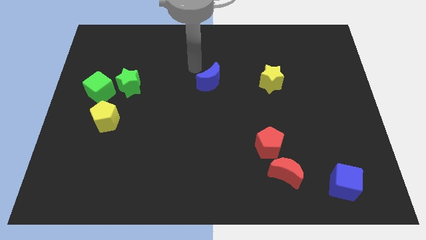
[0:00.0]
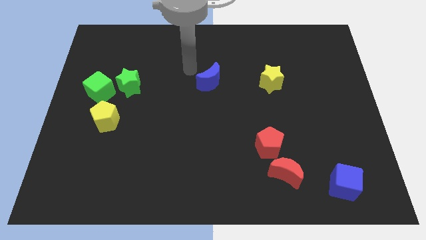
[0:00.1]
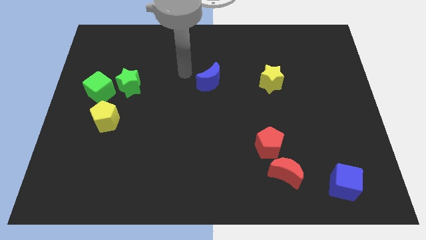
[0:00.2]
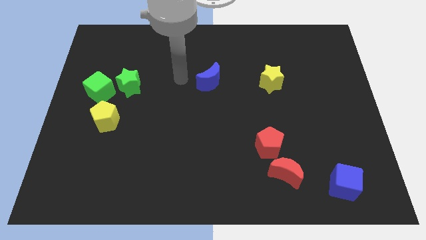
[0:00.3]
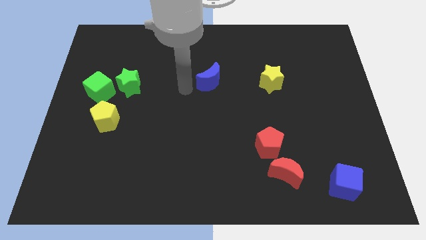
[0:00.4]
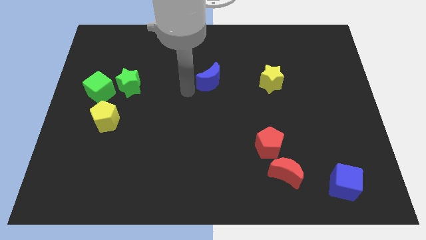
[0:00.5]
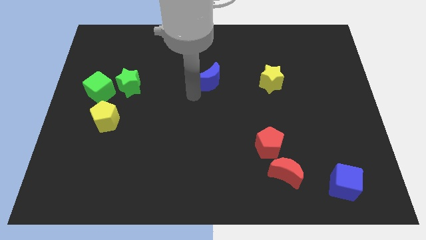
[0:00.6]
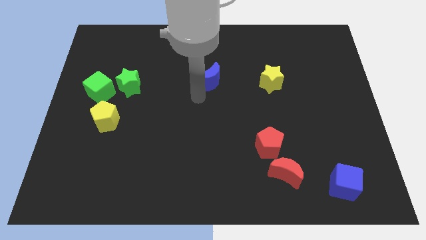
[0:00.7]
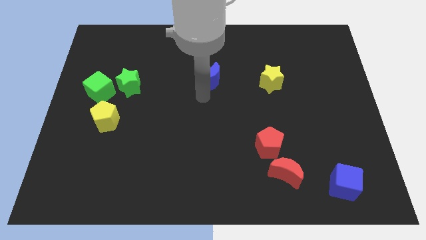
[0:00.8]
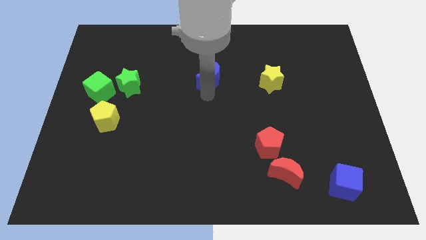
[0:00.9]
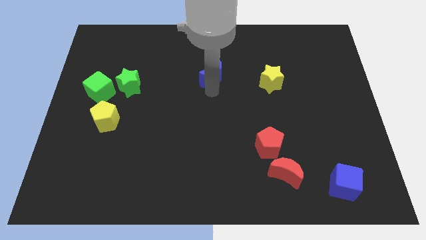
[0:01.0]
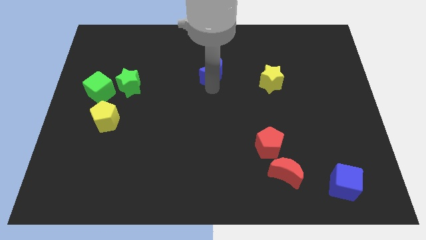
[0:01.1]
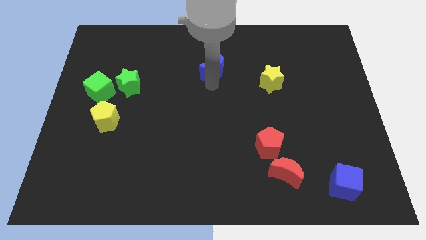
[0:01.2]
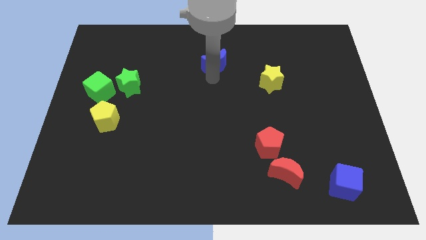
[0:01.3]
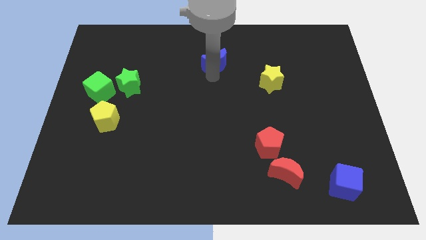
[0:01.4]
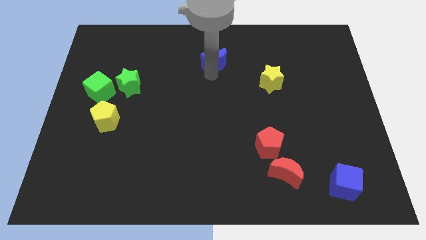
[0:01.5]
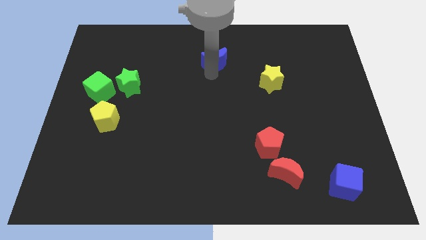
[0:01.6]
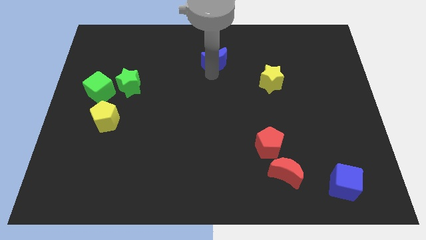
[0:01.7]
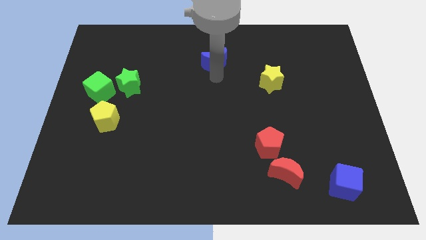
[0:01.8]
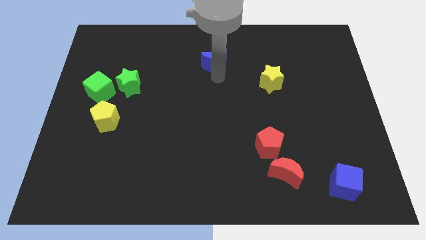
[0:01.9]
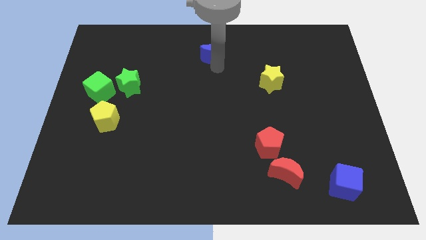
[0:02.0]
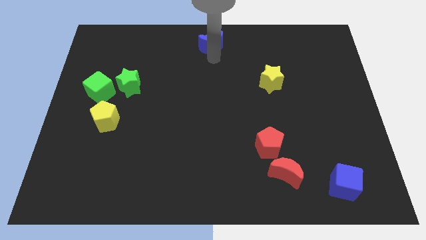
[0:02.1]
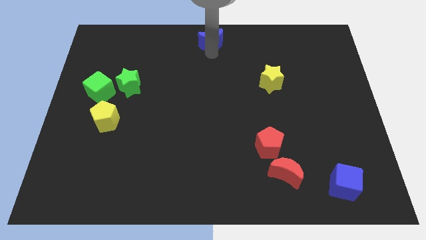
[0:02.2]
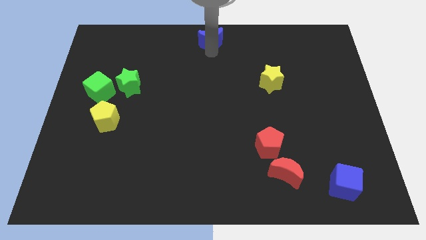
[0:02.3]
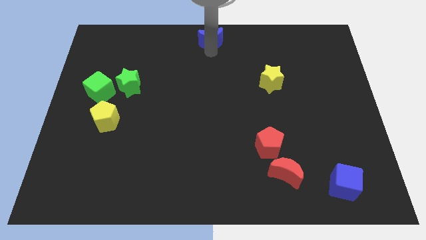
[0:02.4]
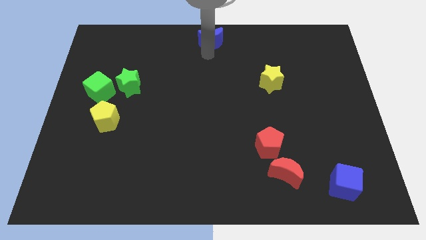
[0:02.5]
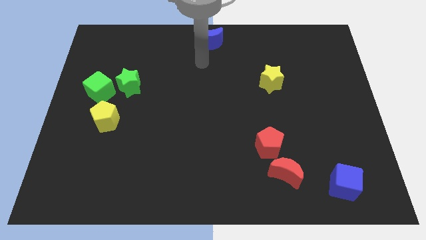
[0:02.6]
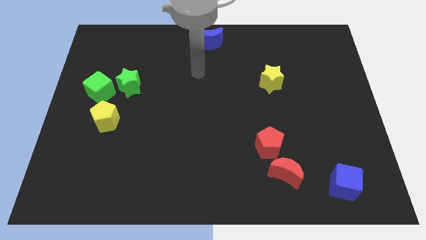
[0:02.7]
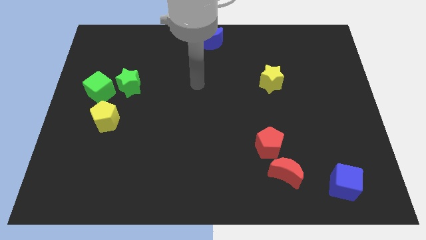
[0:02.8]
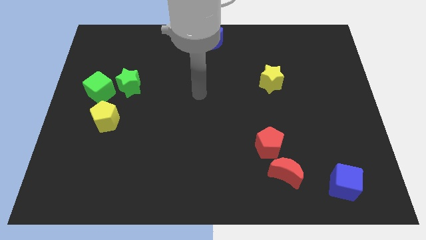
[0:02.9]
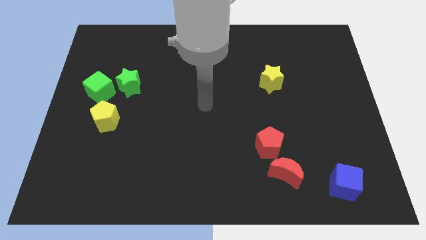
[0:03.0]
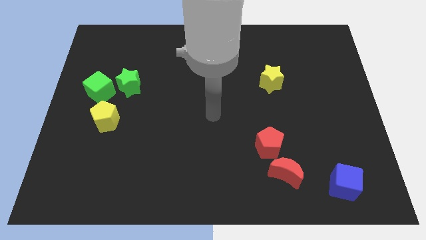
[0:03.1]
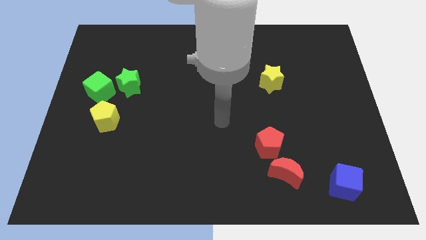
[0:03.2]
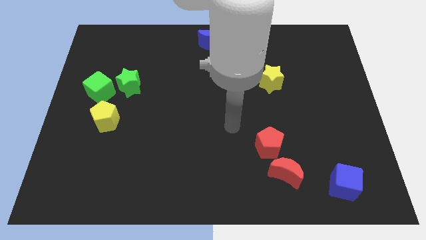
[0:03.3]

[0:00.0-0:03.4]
place the blue moon diagonally top left to the yellow star

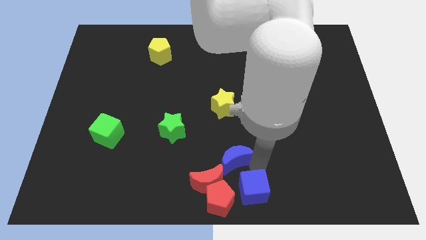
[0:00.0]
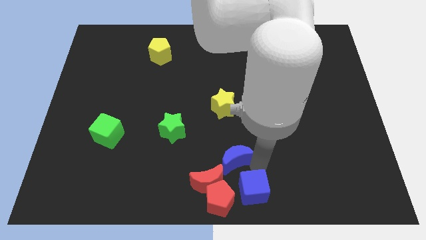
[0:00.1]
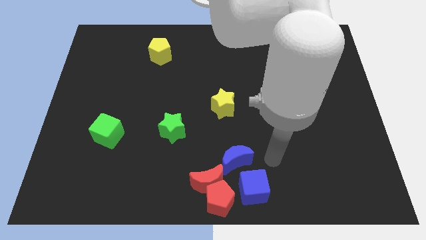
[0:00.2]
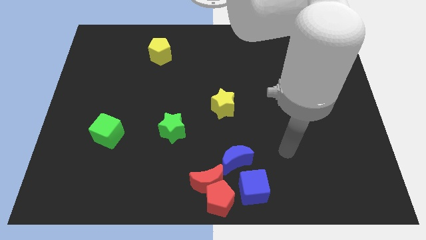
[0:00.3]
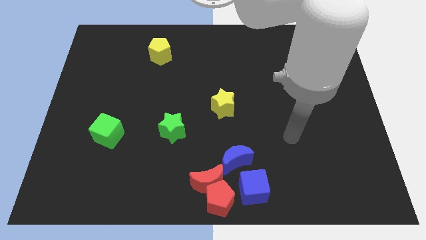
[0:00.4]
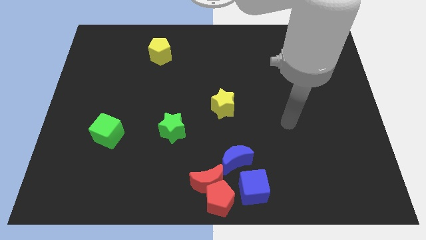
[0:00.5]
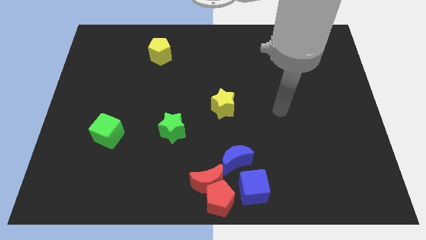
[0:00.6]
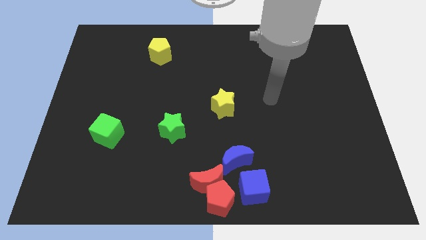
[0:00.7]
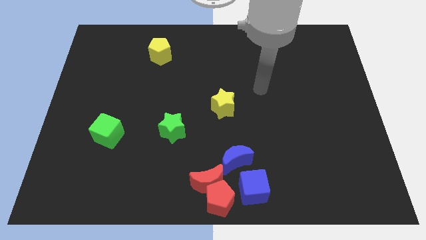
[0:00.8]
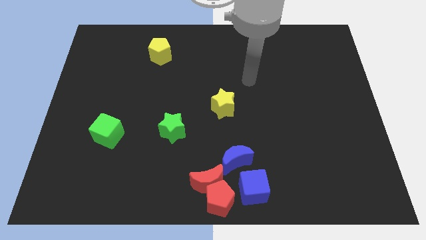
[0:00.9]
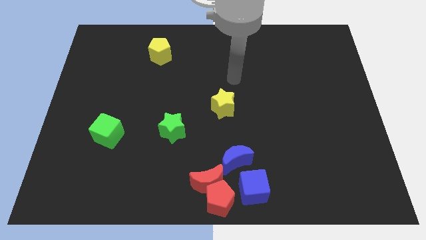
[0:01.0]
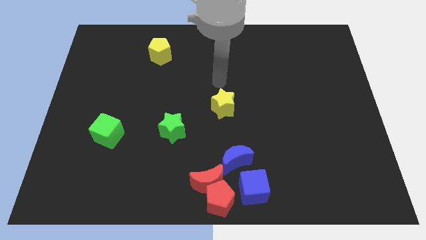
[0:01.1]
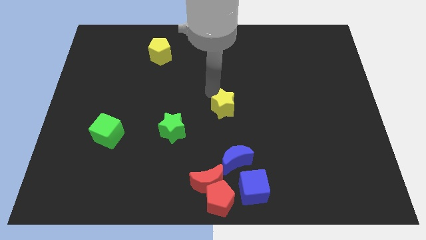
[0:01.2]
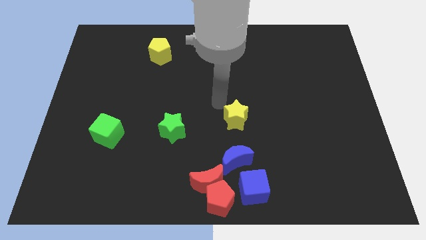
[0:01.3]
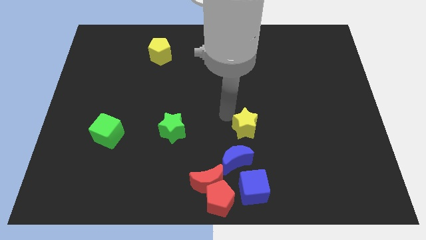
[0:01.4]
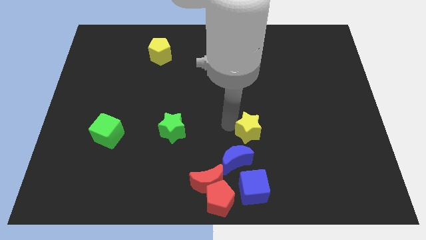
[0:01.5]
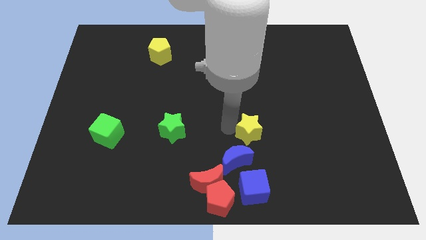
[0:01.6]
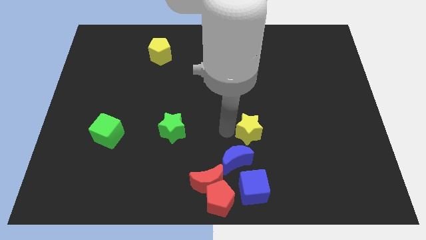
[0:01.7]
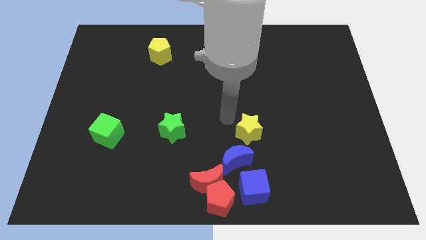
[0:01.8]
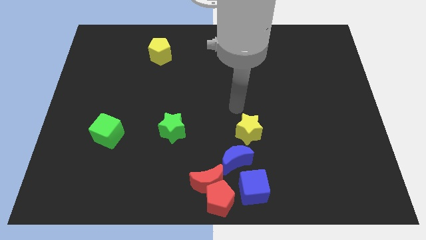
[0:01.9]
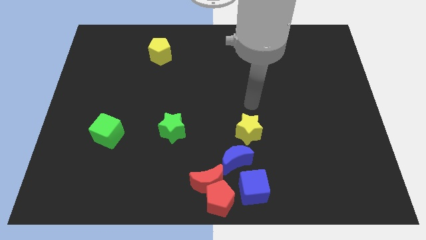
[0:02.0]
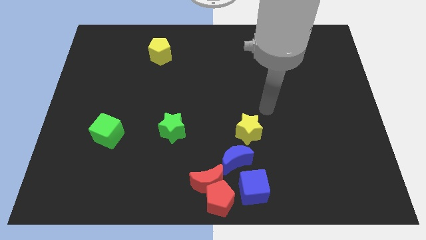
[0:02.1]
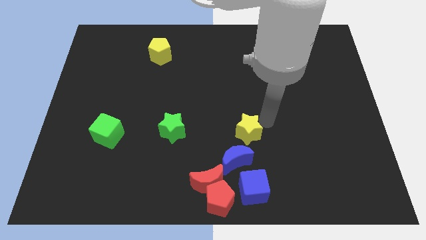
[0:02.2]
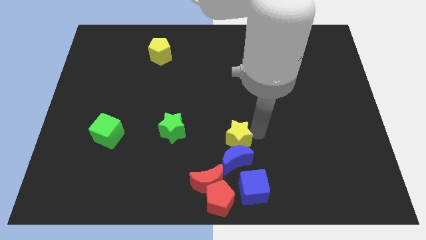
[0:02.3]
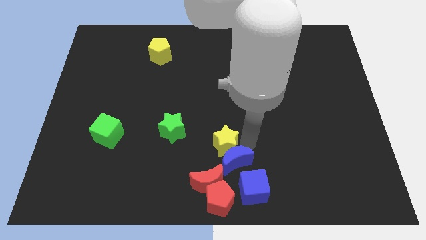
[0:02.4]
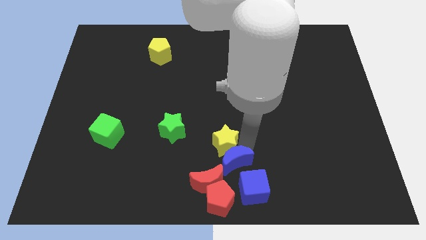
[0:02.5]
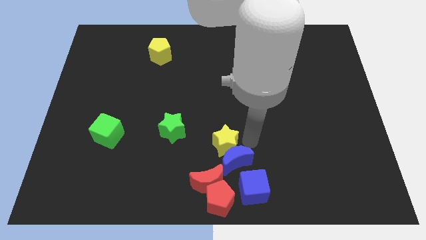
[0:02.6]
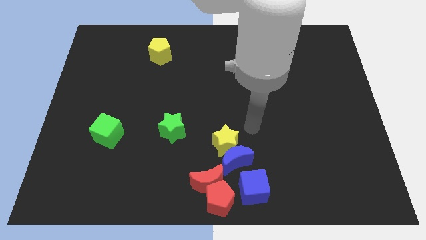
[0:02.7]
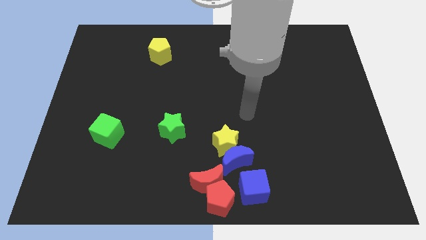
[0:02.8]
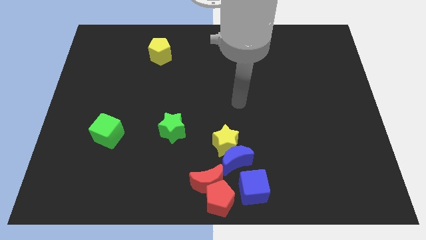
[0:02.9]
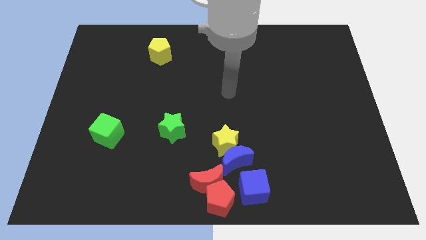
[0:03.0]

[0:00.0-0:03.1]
push yellow star into the blue moon

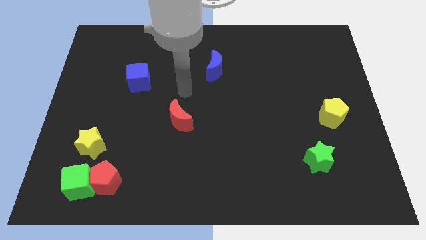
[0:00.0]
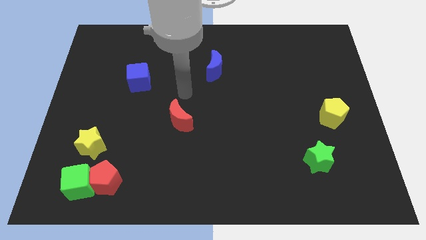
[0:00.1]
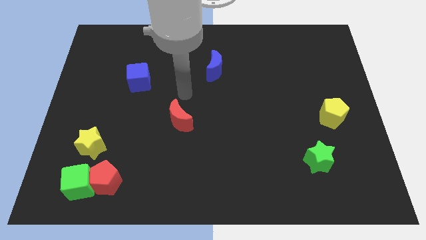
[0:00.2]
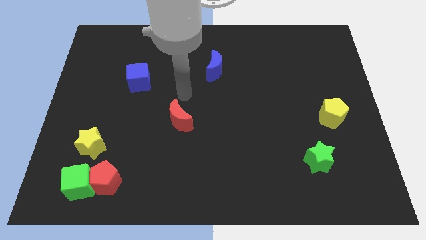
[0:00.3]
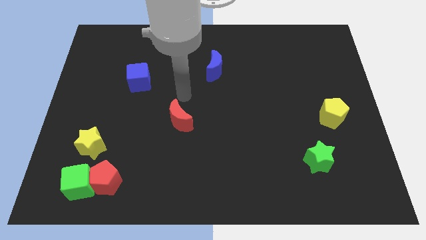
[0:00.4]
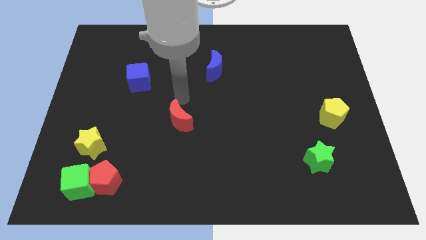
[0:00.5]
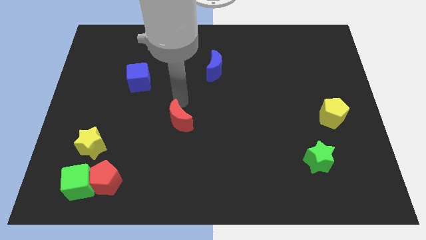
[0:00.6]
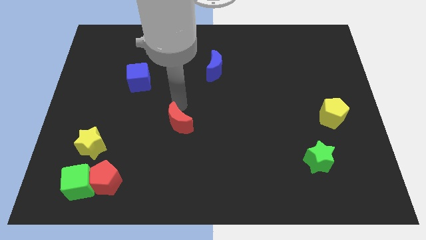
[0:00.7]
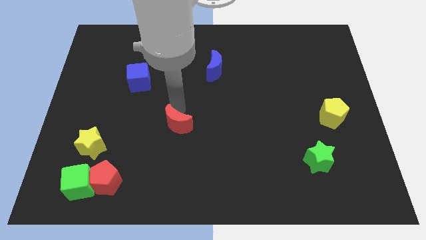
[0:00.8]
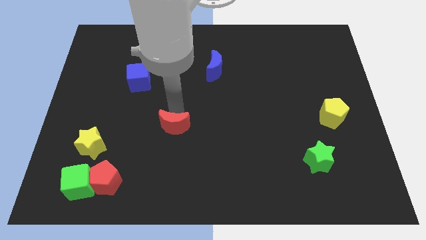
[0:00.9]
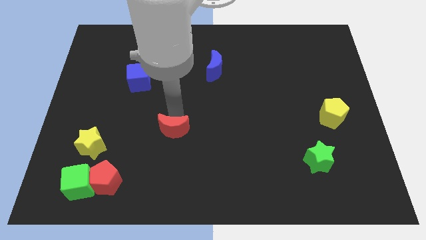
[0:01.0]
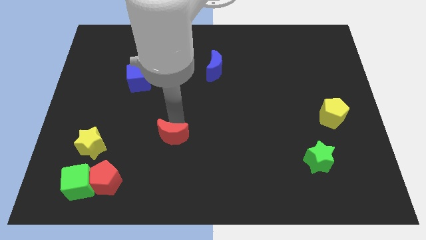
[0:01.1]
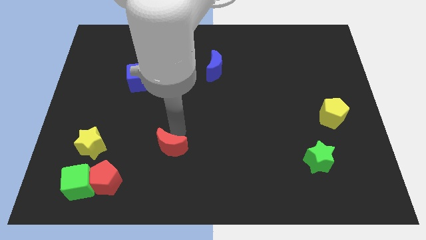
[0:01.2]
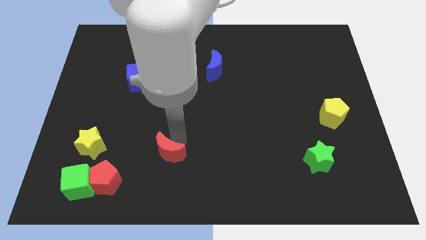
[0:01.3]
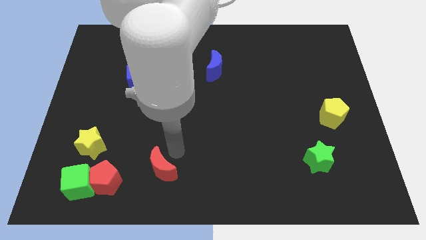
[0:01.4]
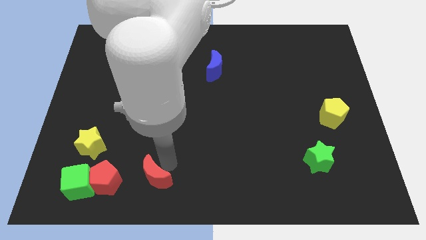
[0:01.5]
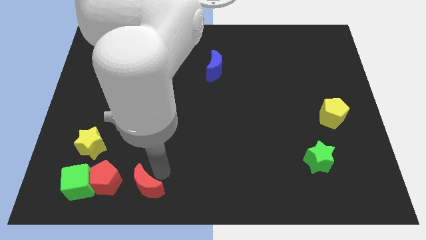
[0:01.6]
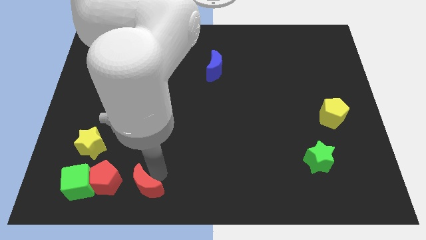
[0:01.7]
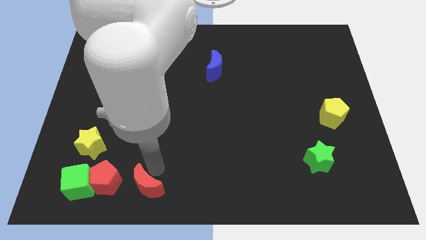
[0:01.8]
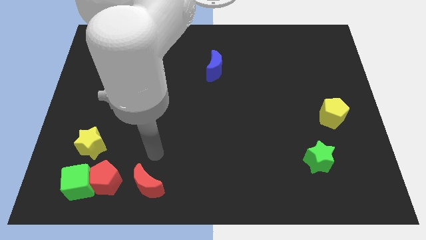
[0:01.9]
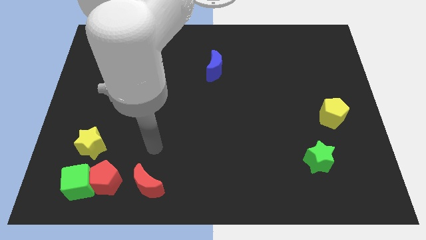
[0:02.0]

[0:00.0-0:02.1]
move the red moon downwards

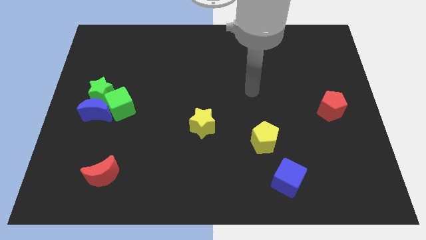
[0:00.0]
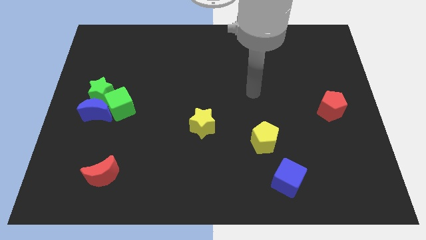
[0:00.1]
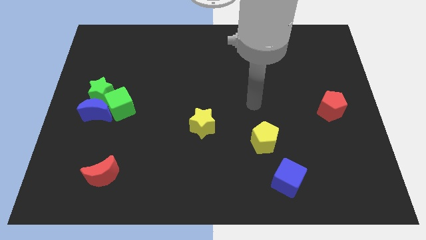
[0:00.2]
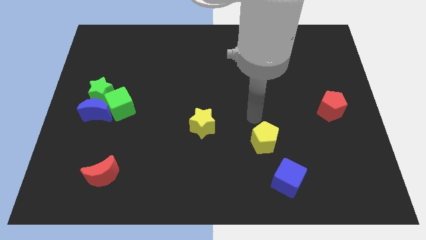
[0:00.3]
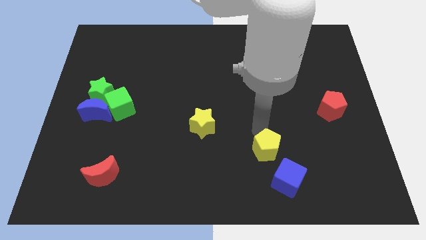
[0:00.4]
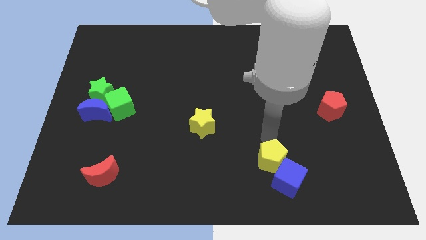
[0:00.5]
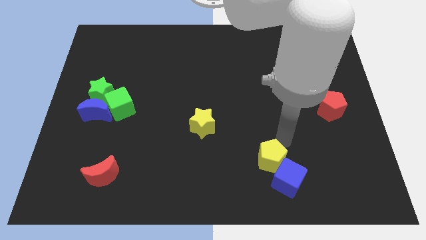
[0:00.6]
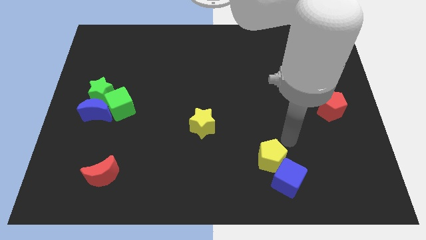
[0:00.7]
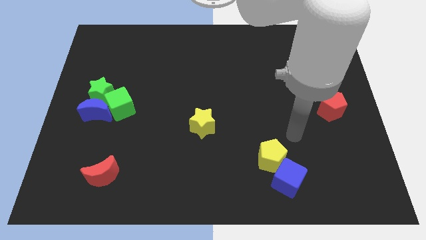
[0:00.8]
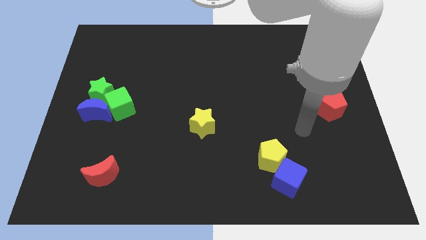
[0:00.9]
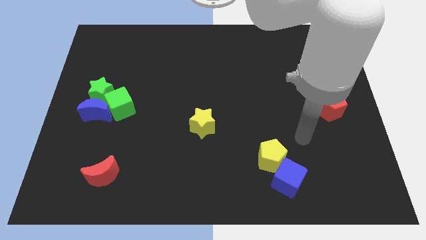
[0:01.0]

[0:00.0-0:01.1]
push yellow pentagon in to blue cube
